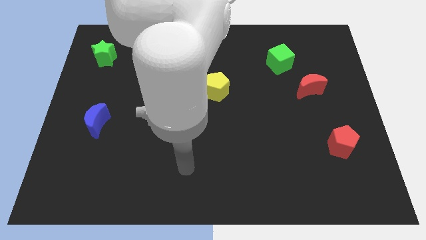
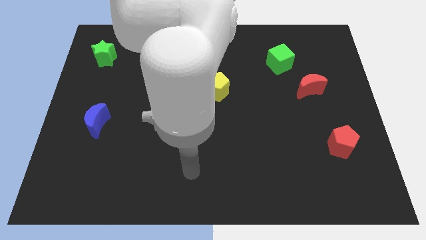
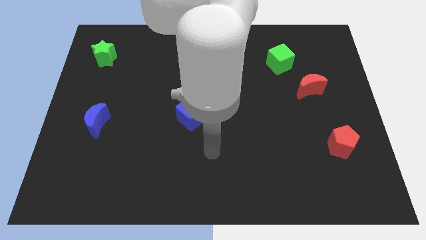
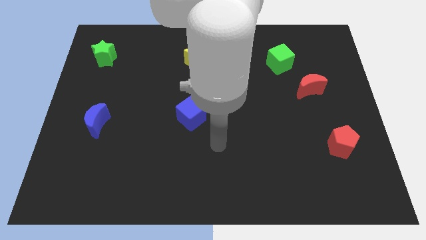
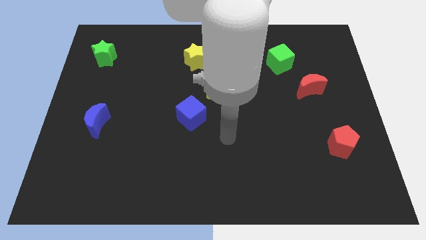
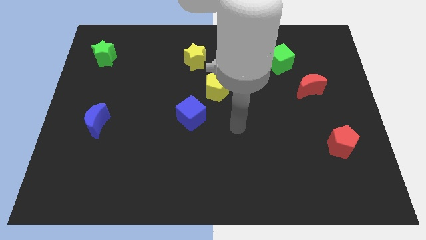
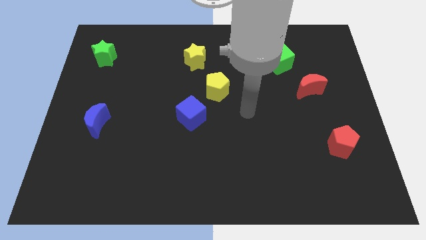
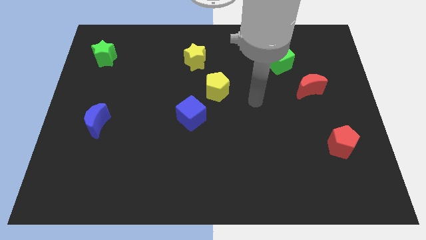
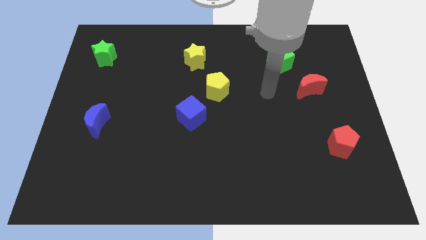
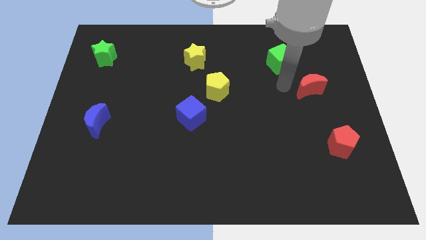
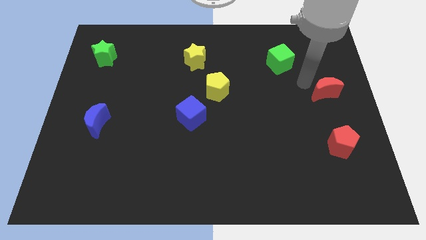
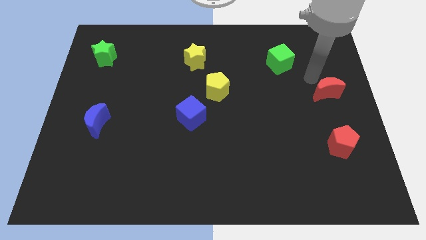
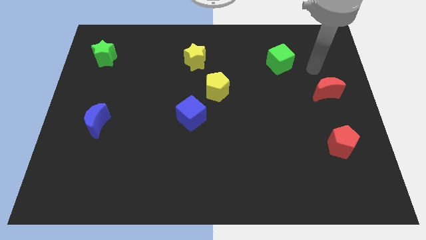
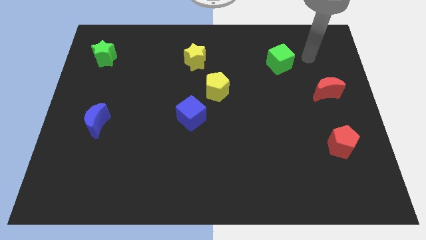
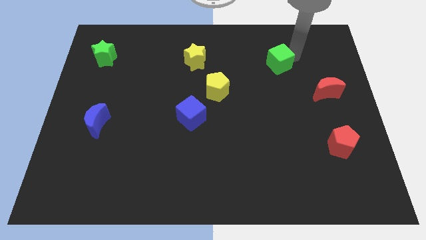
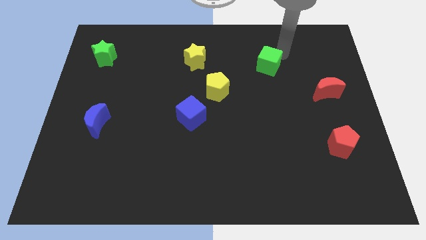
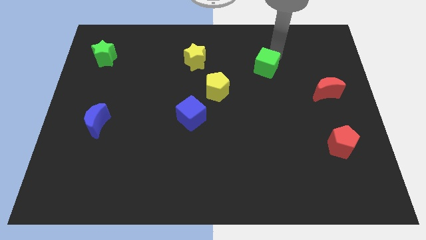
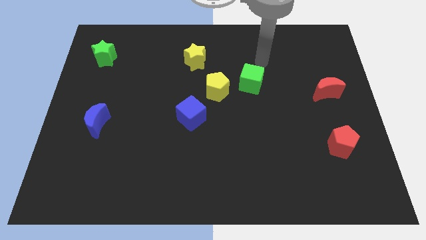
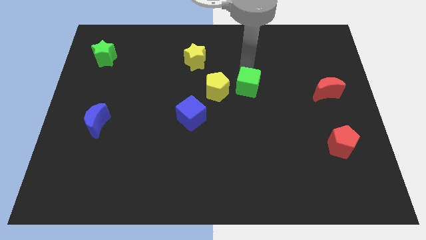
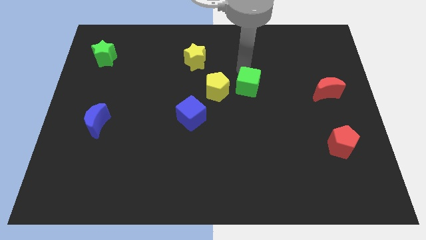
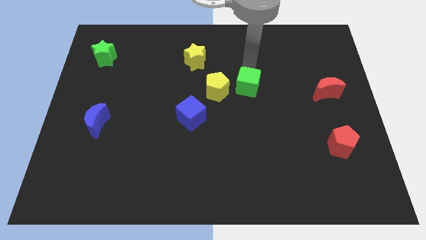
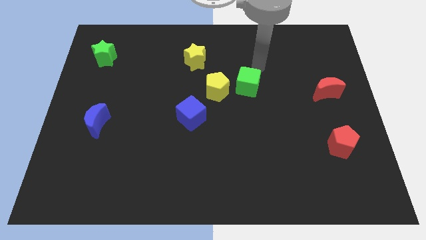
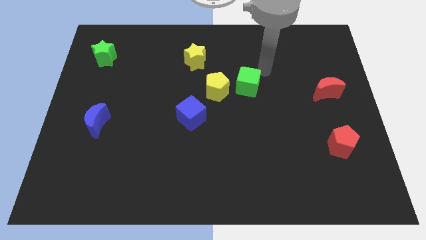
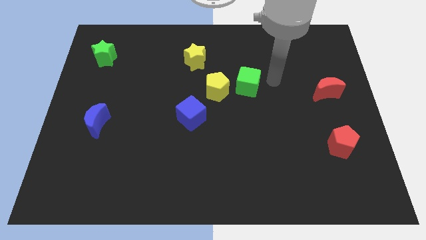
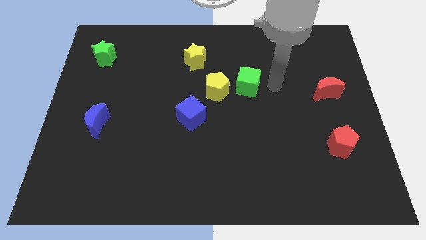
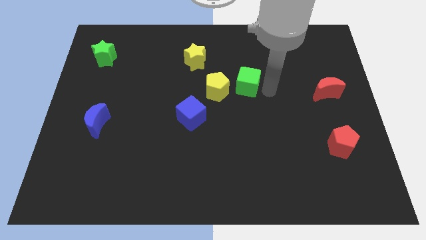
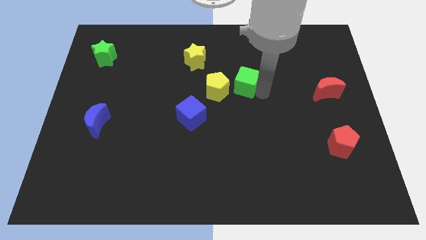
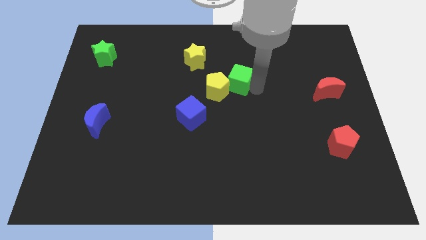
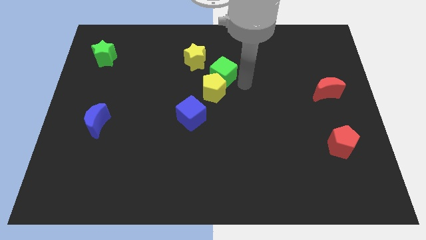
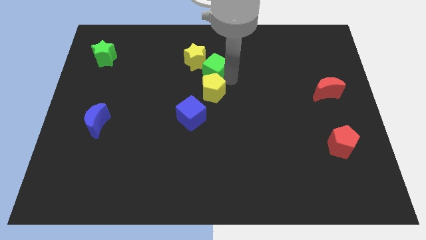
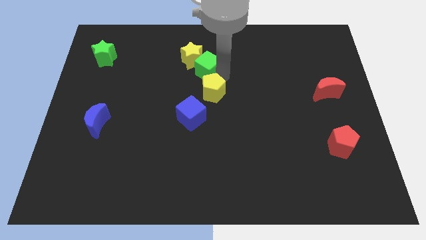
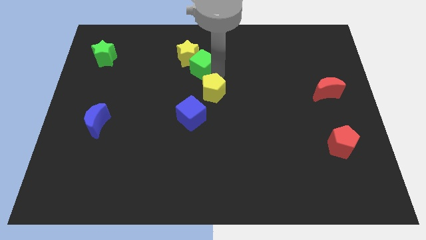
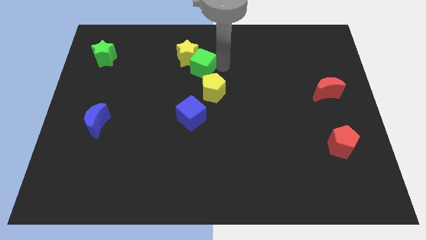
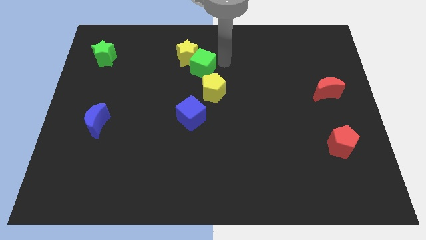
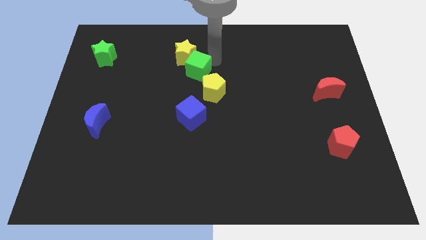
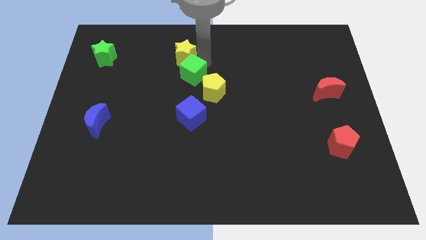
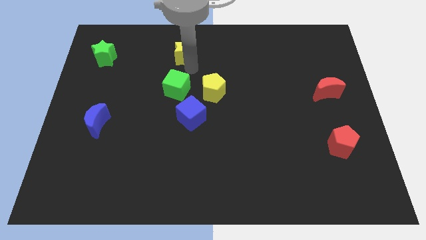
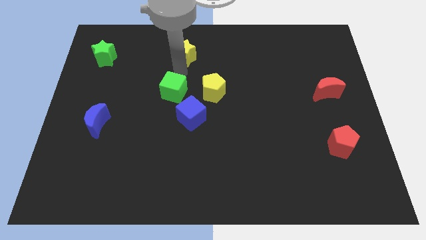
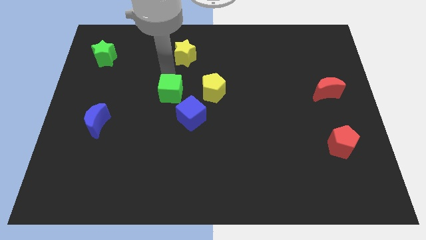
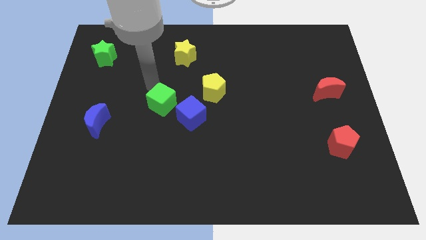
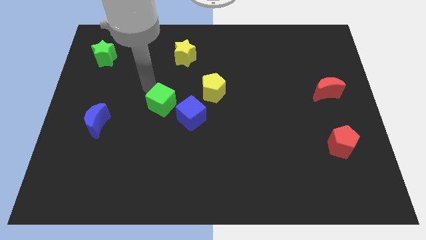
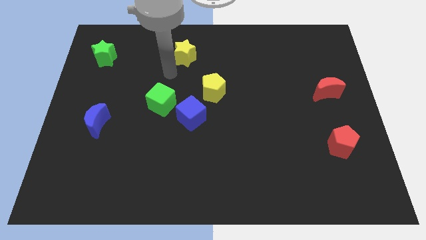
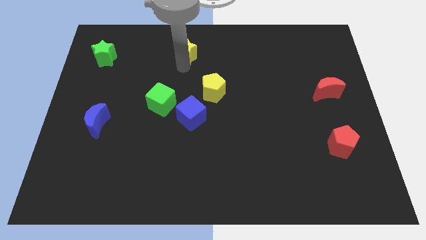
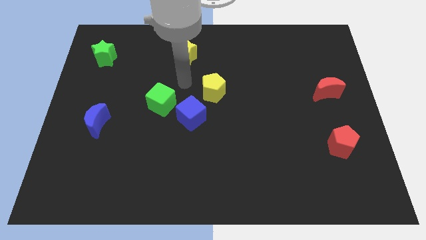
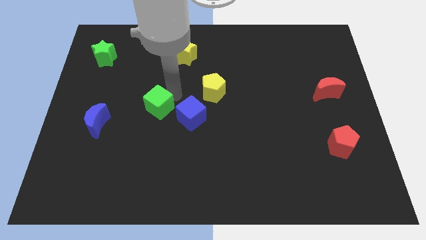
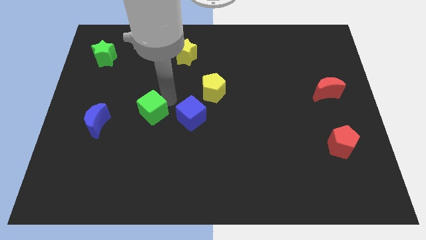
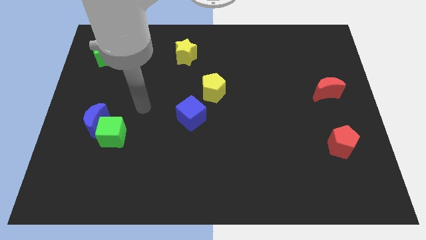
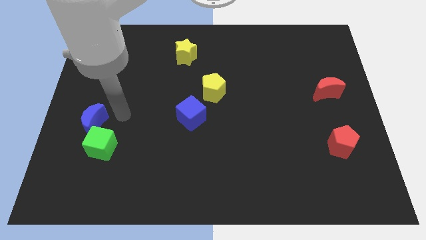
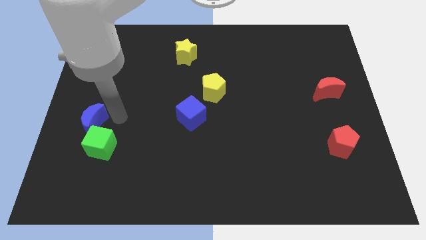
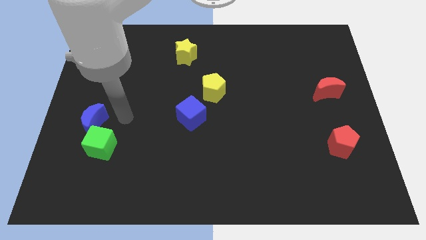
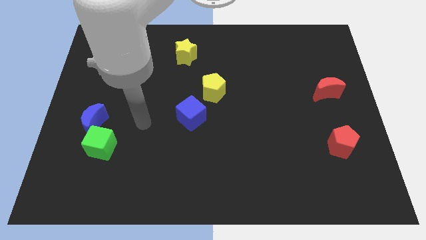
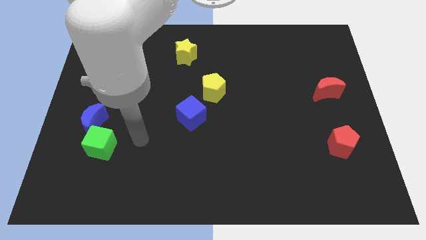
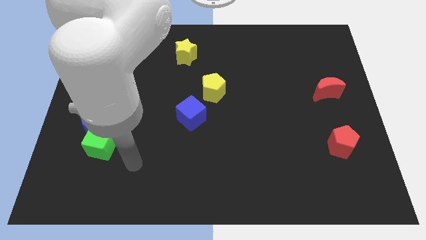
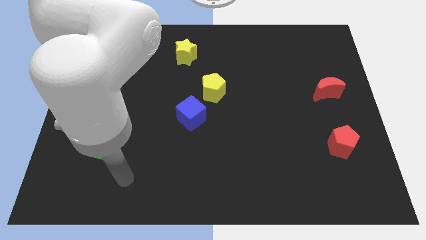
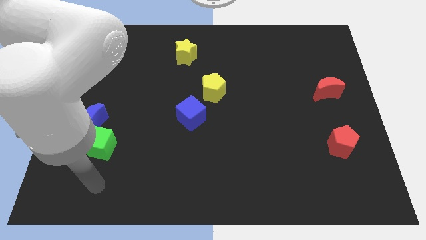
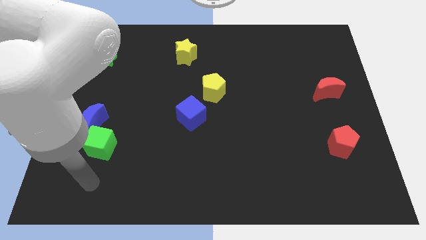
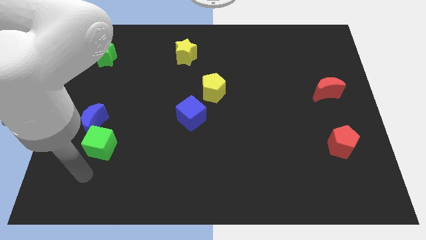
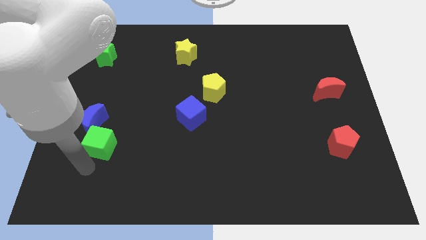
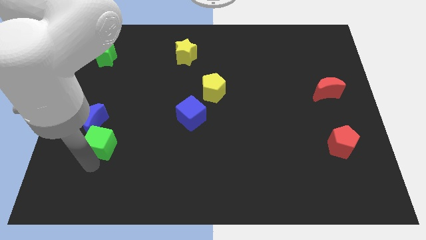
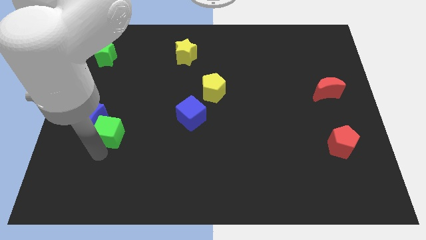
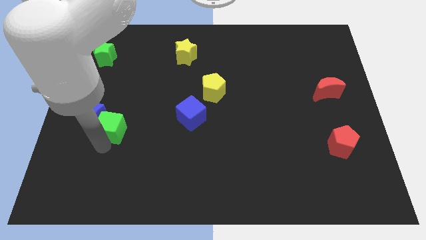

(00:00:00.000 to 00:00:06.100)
push the green cube towards the blue moon

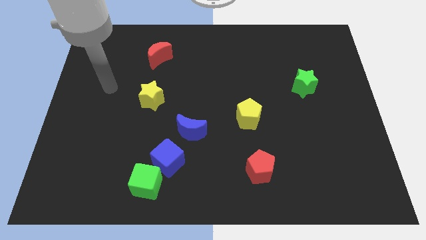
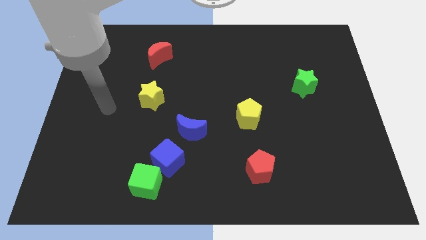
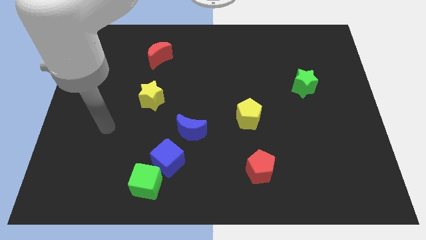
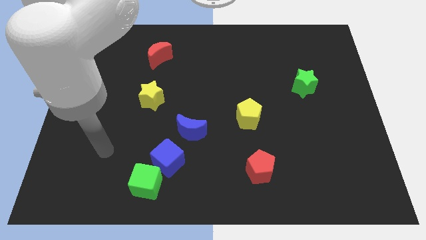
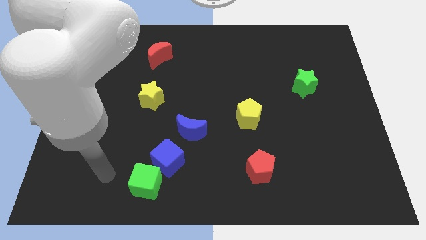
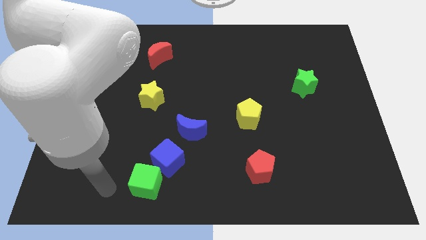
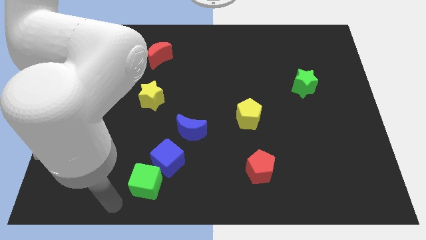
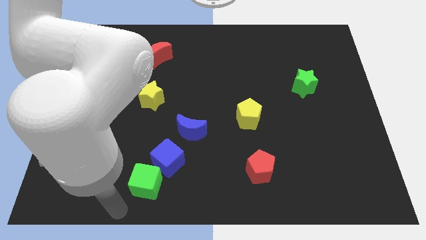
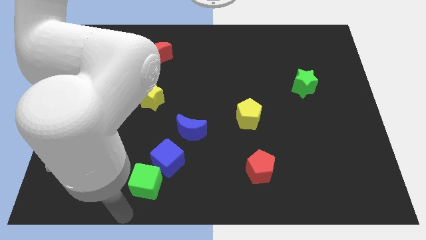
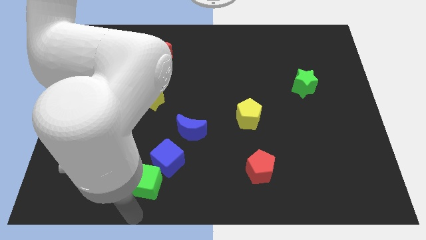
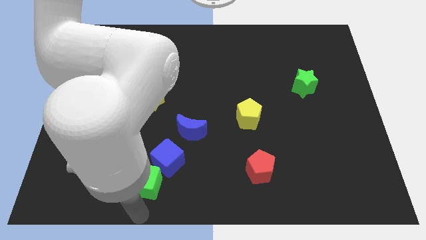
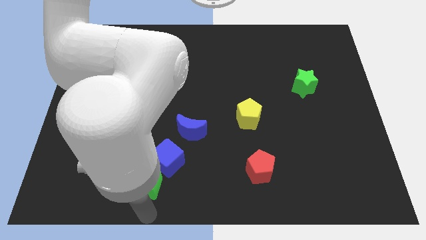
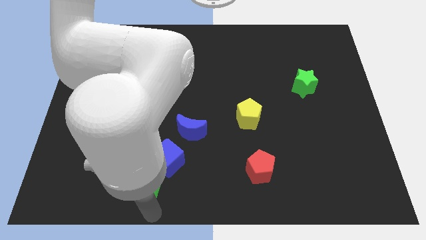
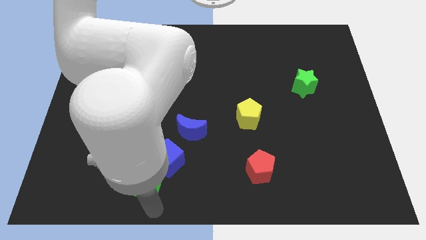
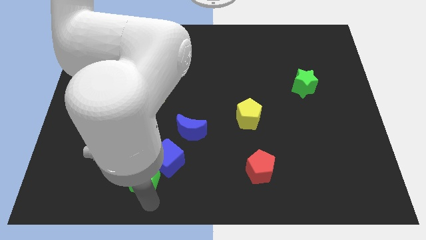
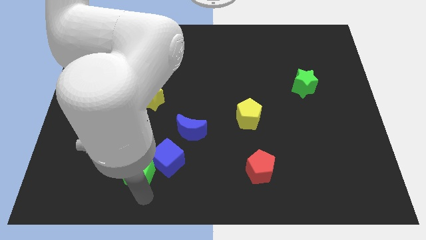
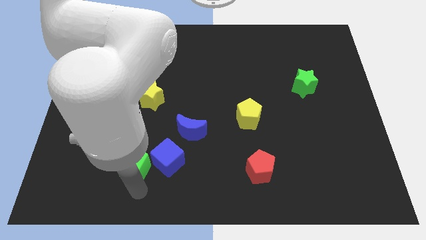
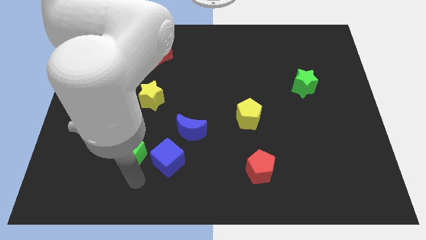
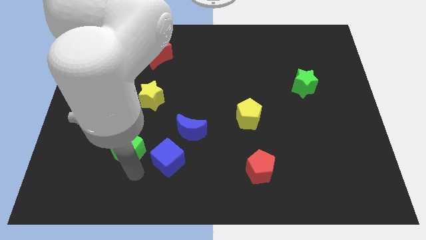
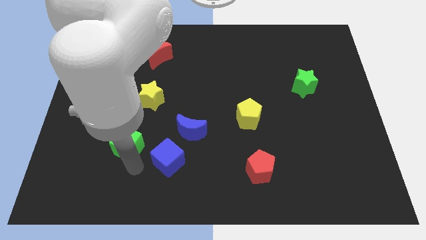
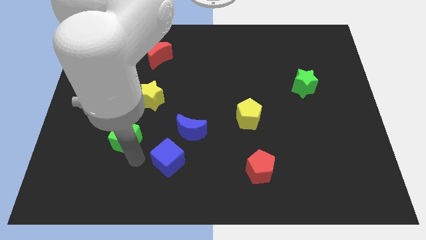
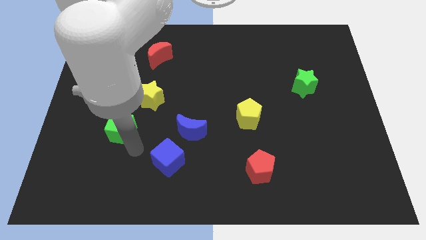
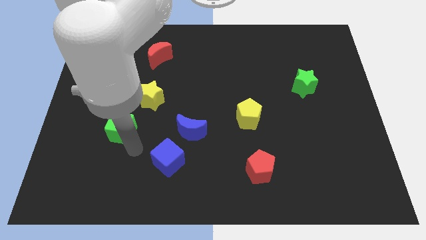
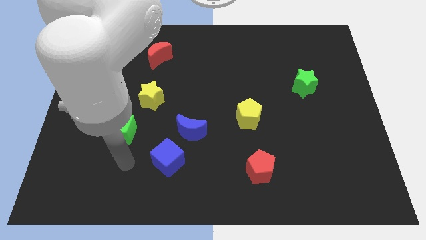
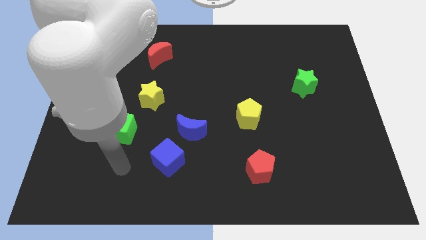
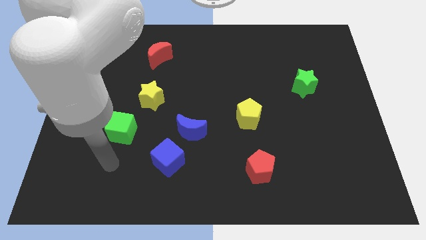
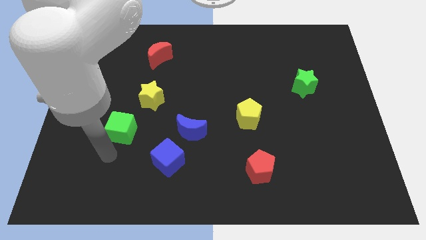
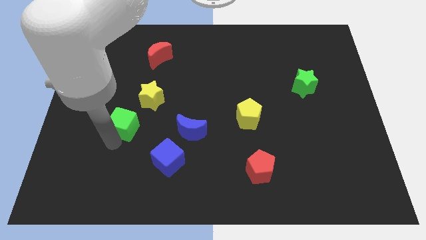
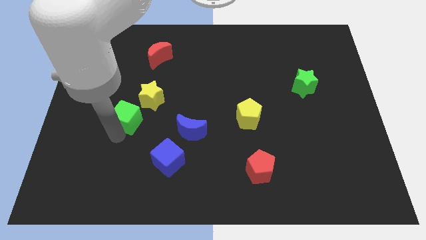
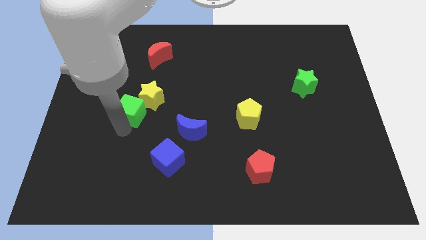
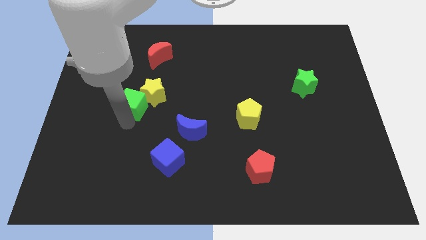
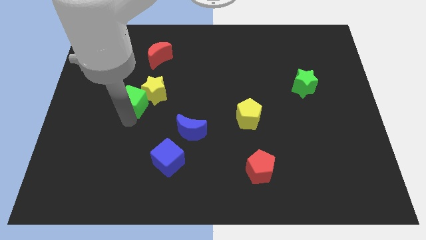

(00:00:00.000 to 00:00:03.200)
slide the green cube to the yellow star
